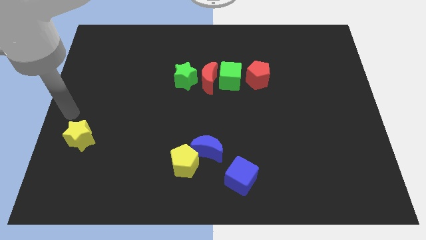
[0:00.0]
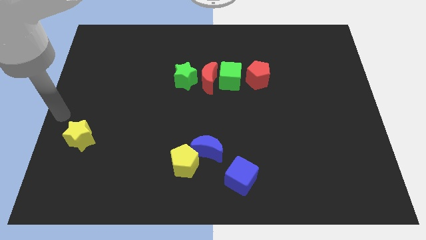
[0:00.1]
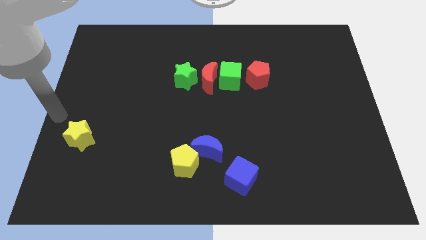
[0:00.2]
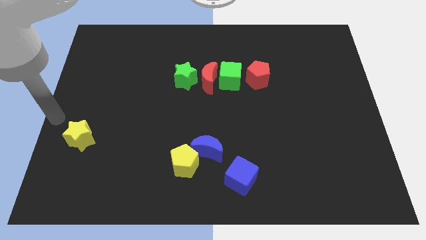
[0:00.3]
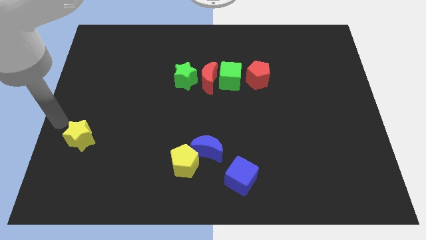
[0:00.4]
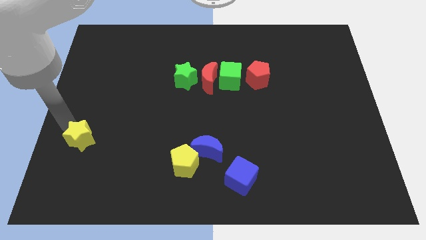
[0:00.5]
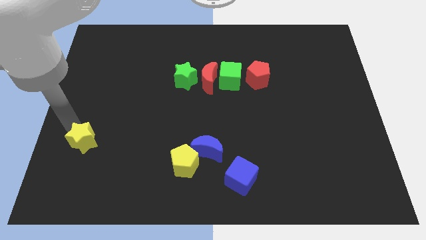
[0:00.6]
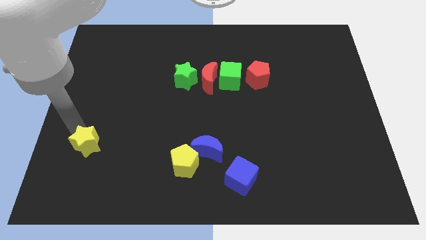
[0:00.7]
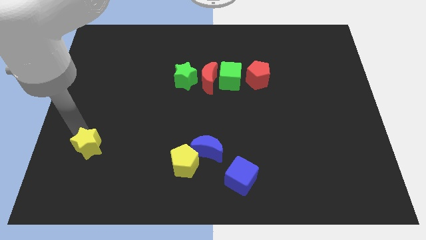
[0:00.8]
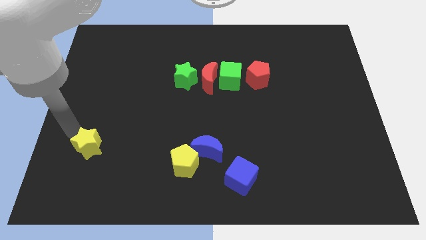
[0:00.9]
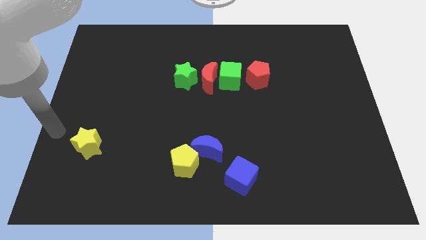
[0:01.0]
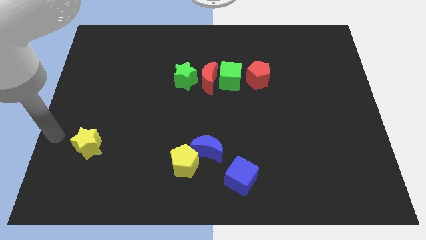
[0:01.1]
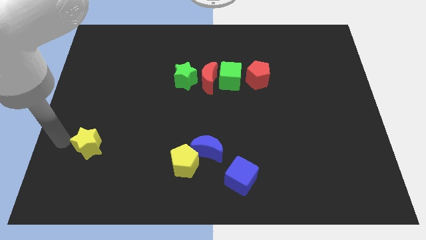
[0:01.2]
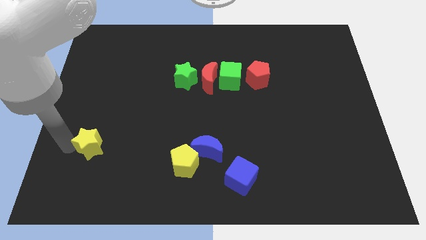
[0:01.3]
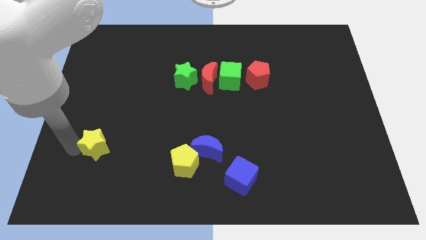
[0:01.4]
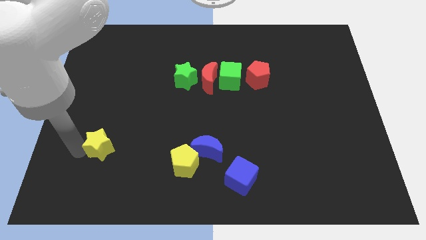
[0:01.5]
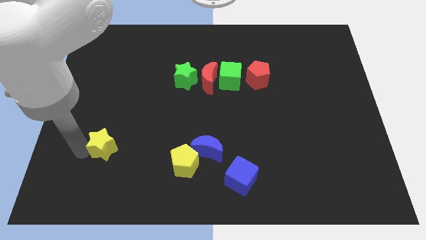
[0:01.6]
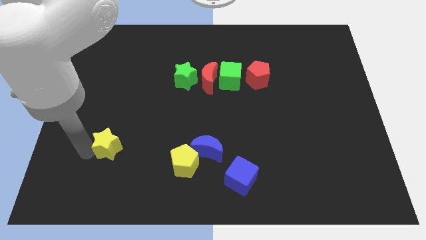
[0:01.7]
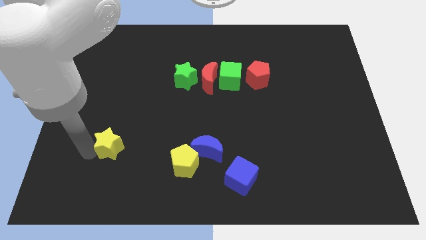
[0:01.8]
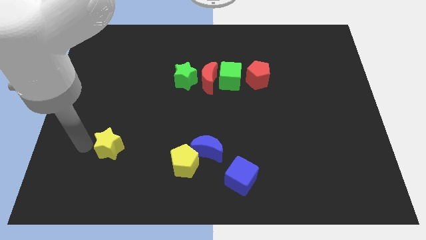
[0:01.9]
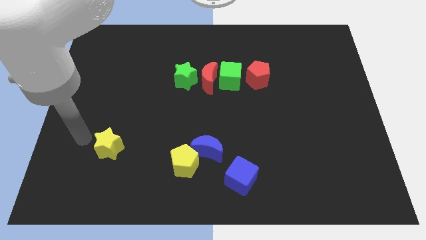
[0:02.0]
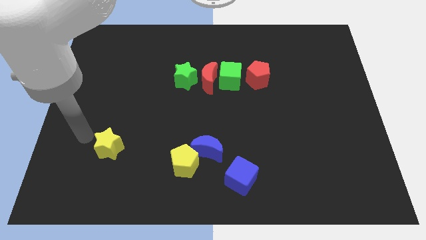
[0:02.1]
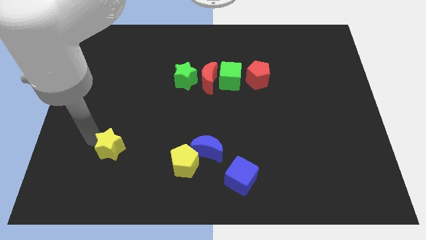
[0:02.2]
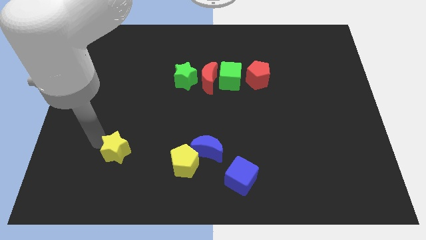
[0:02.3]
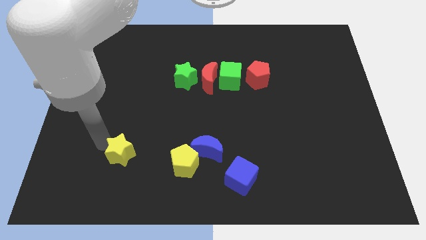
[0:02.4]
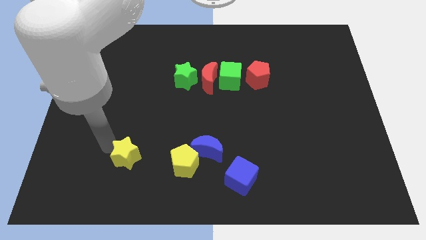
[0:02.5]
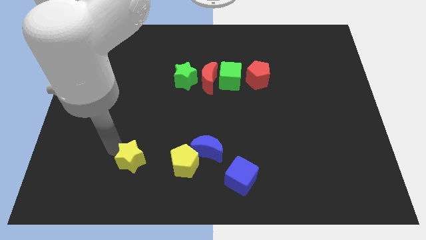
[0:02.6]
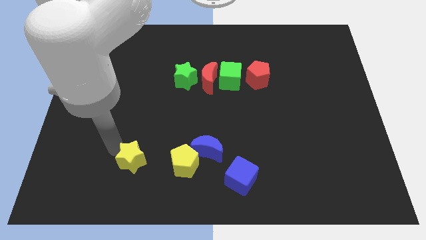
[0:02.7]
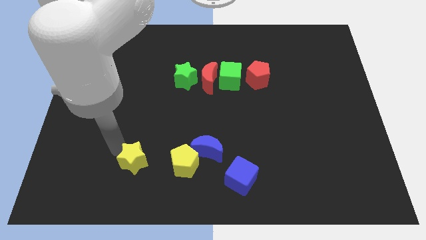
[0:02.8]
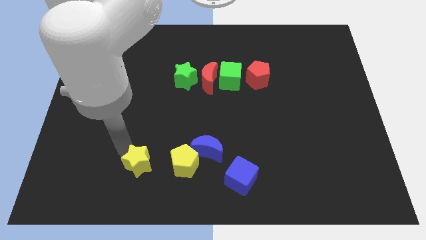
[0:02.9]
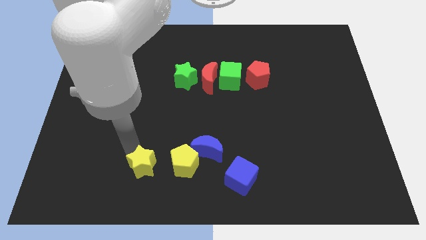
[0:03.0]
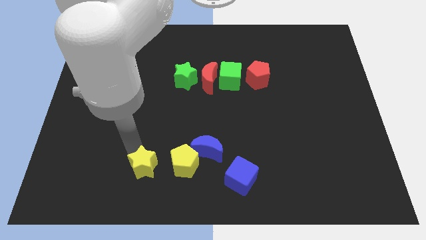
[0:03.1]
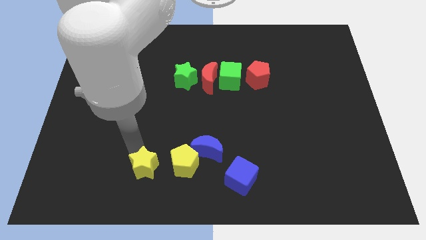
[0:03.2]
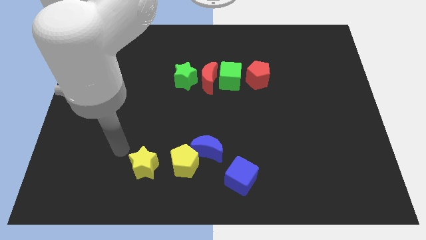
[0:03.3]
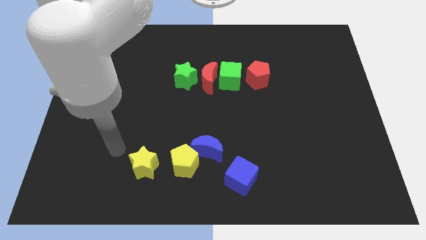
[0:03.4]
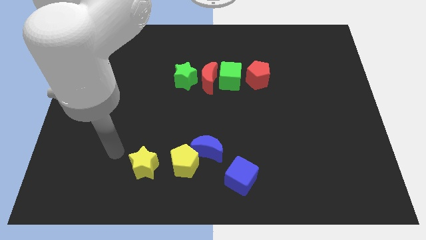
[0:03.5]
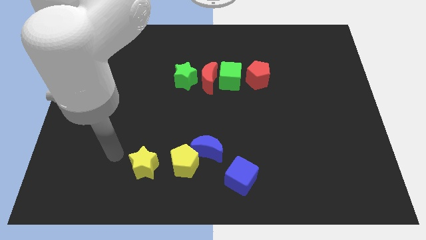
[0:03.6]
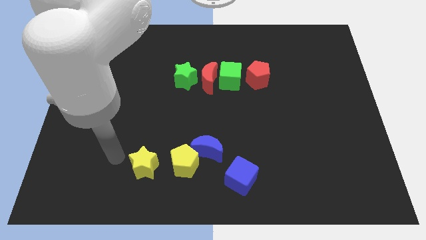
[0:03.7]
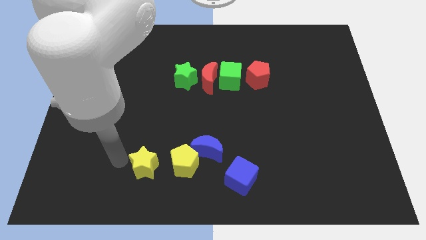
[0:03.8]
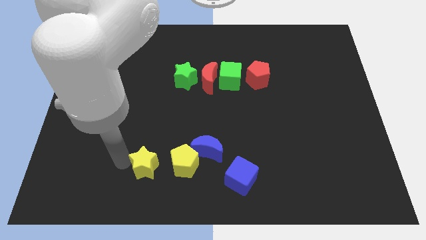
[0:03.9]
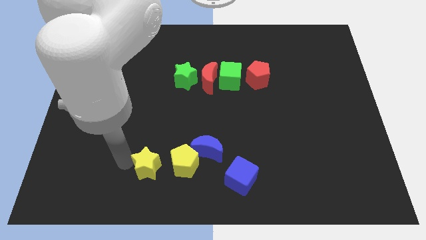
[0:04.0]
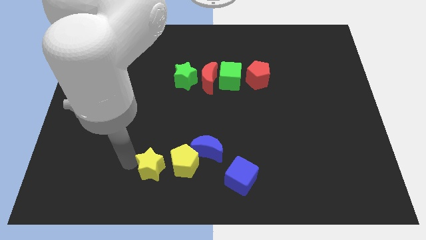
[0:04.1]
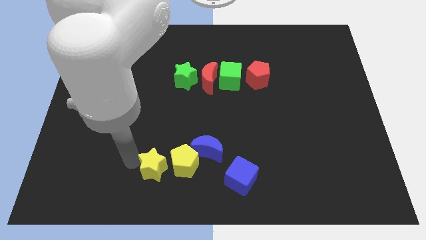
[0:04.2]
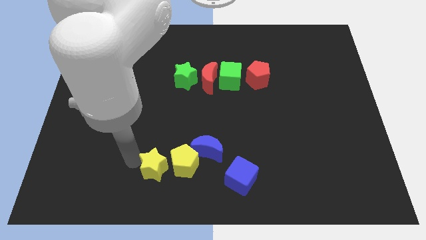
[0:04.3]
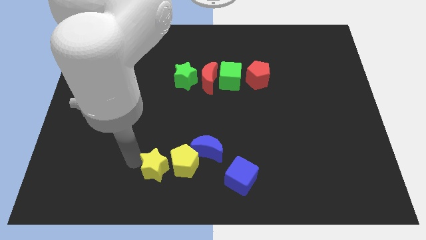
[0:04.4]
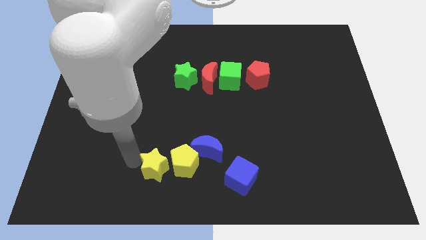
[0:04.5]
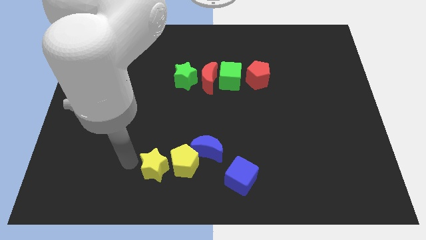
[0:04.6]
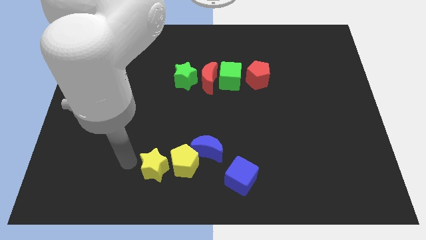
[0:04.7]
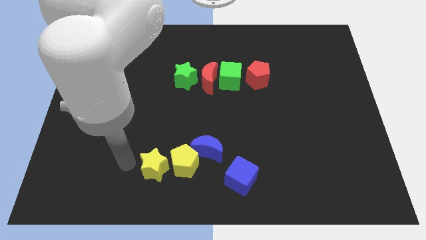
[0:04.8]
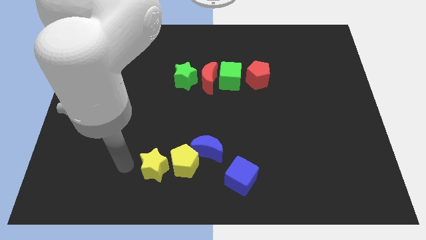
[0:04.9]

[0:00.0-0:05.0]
push the yellow star near the yellow pentagon

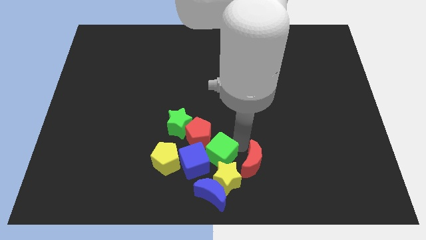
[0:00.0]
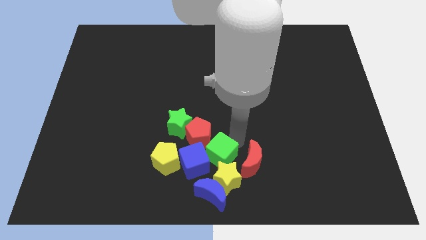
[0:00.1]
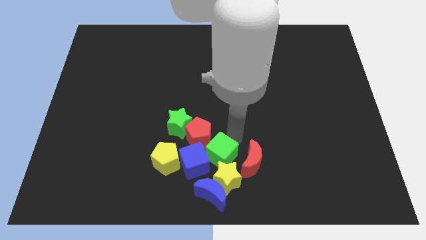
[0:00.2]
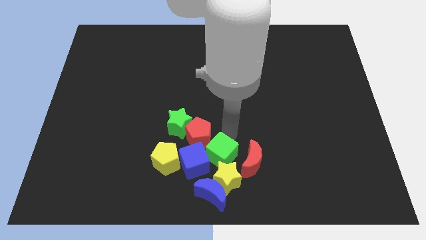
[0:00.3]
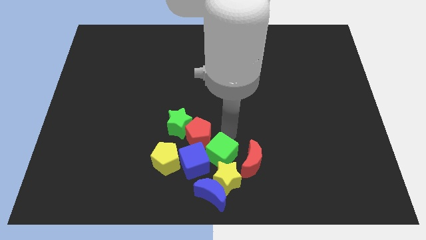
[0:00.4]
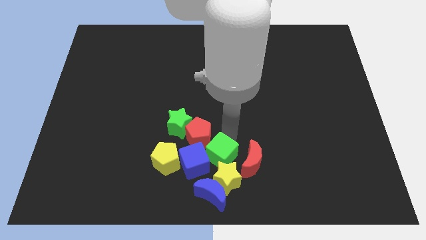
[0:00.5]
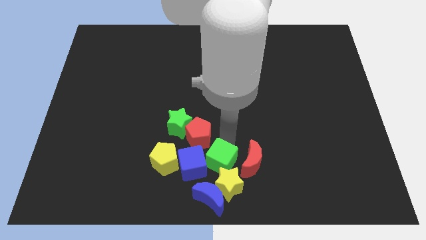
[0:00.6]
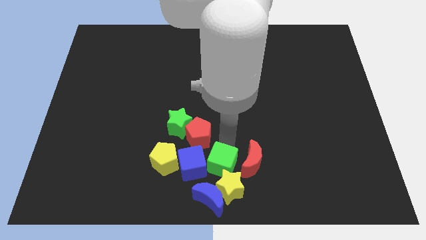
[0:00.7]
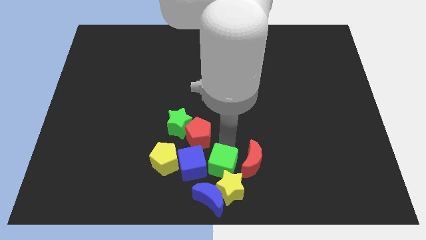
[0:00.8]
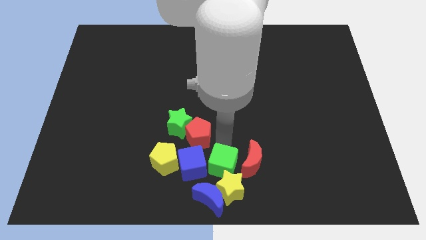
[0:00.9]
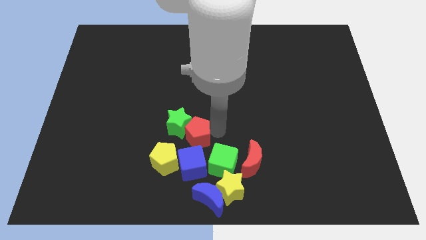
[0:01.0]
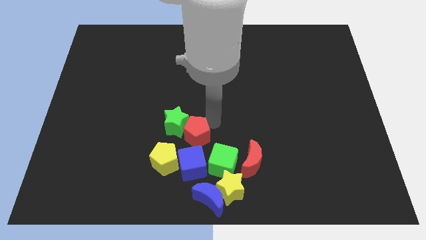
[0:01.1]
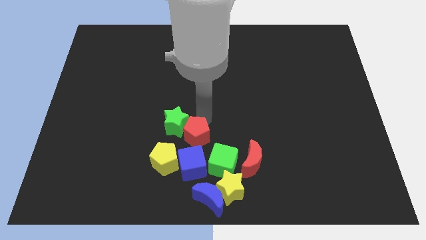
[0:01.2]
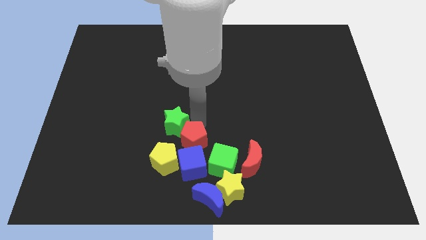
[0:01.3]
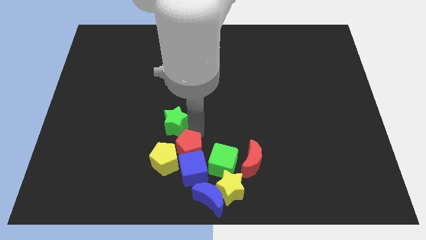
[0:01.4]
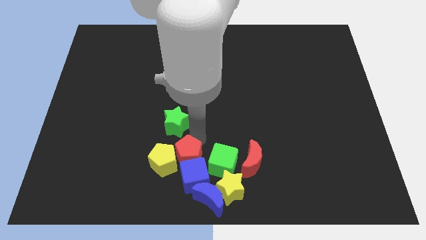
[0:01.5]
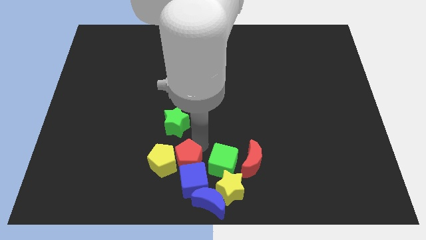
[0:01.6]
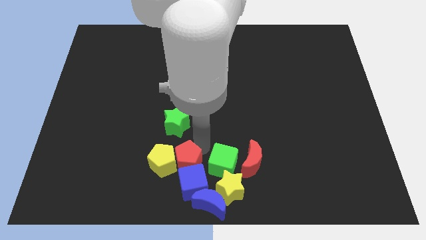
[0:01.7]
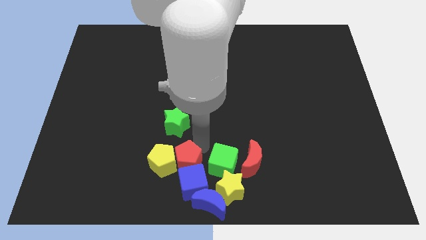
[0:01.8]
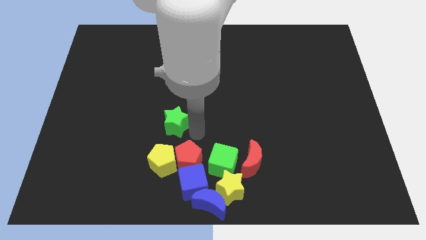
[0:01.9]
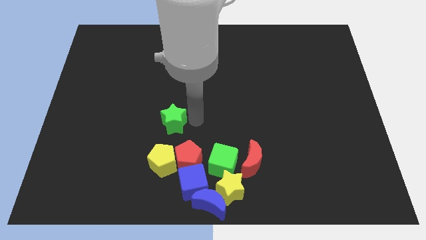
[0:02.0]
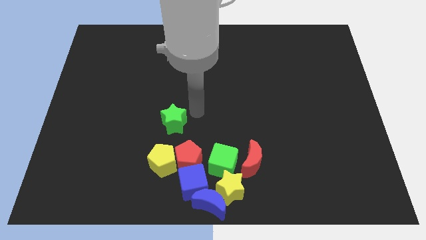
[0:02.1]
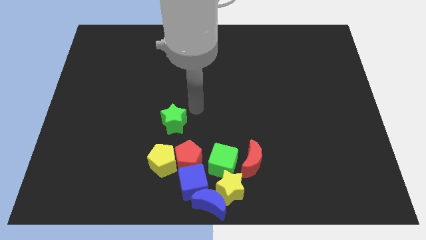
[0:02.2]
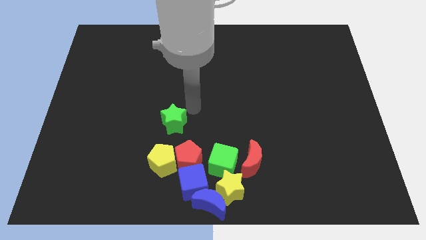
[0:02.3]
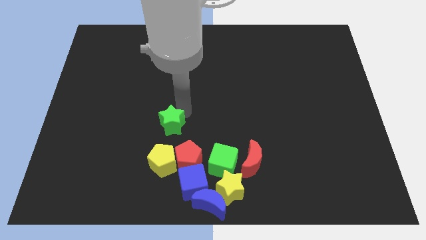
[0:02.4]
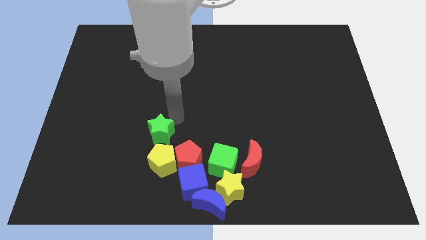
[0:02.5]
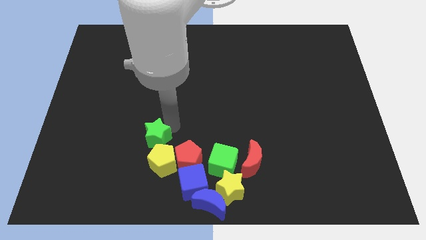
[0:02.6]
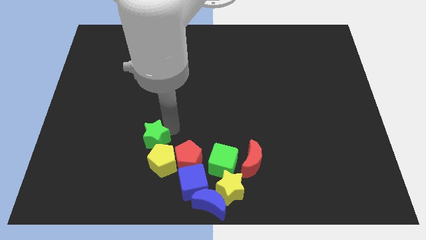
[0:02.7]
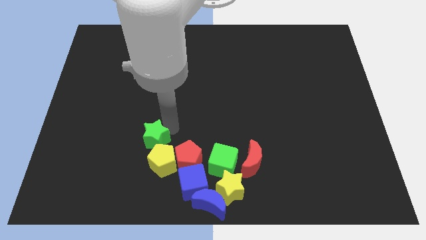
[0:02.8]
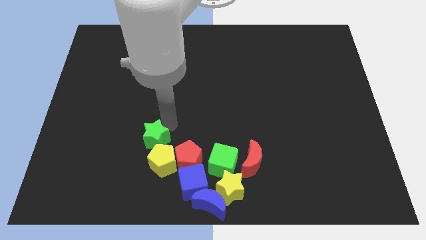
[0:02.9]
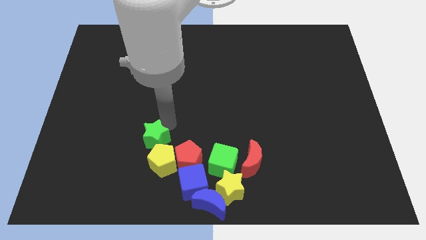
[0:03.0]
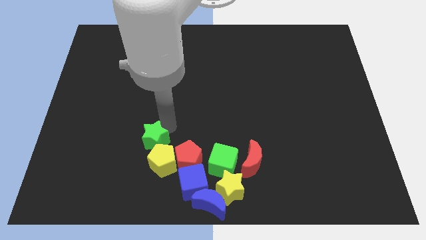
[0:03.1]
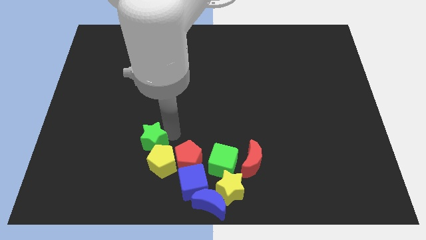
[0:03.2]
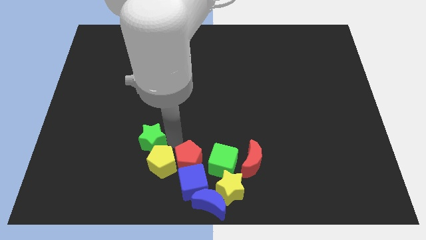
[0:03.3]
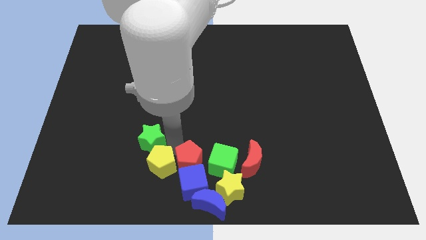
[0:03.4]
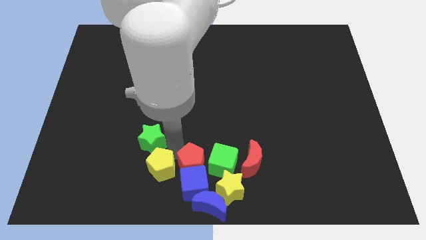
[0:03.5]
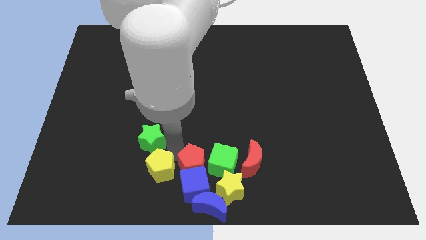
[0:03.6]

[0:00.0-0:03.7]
separate the red pentagon and the green square

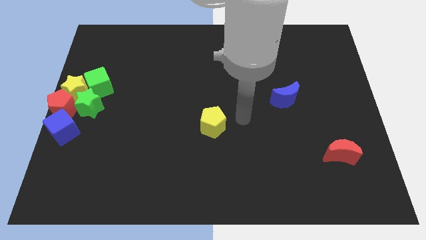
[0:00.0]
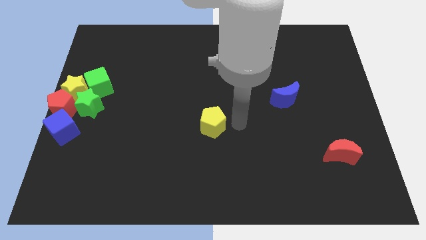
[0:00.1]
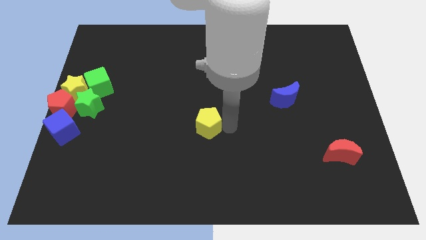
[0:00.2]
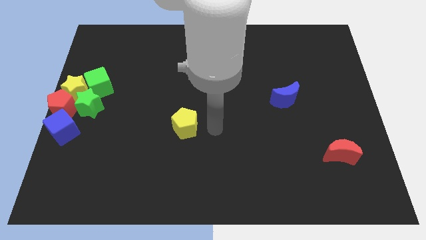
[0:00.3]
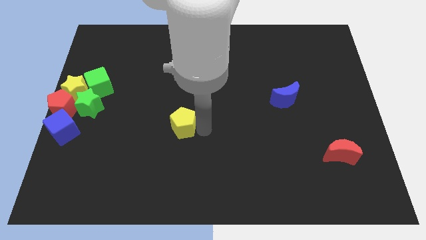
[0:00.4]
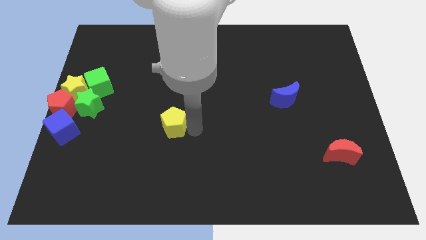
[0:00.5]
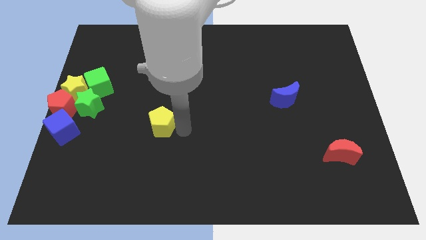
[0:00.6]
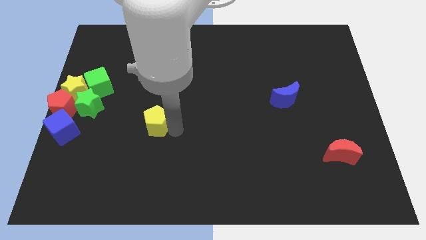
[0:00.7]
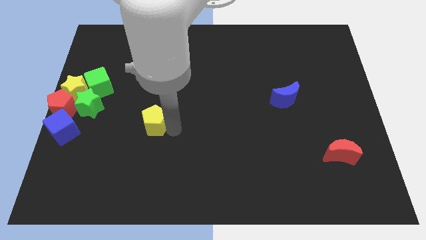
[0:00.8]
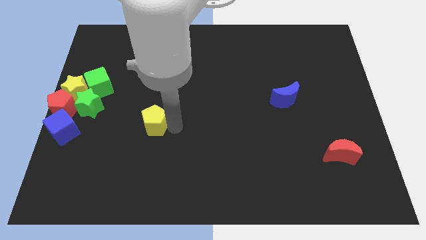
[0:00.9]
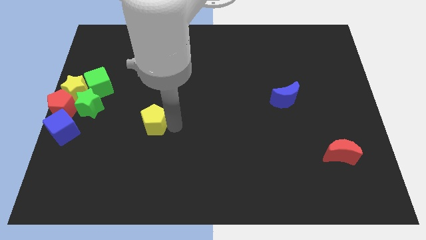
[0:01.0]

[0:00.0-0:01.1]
push the yellow pentagon to the left side of the board
